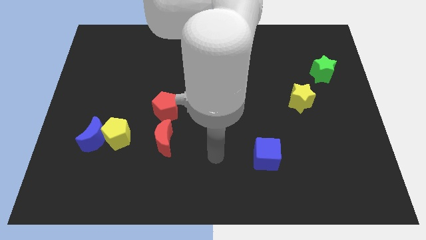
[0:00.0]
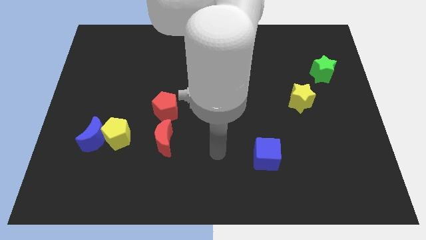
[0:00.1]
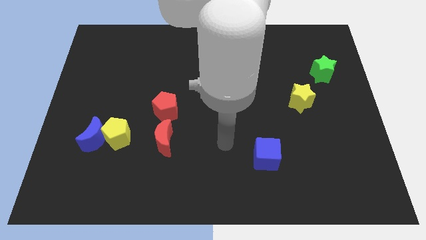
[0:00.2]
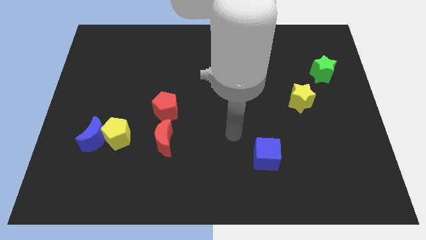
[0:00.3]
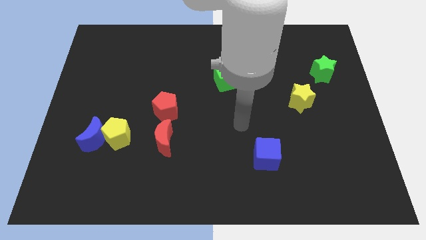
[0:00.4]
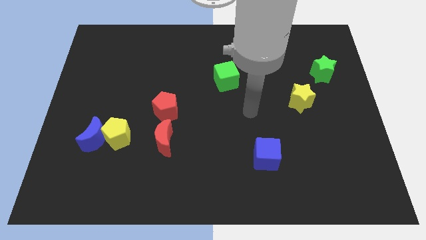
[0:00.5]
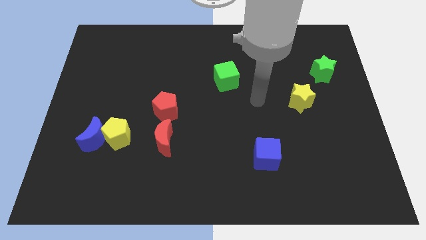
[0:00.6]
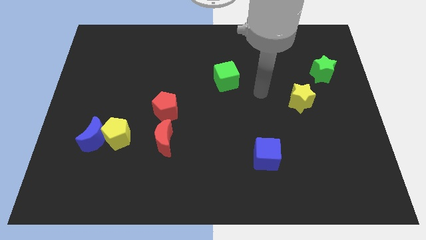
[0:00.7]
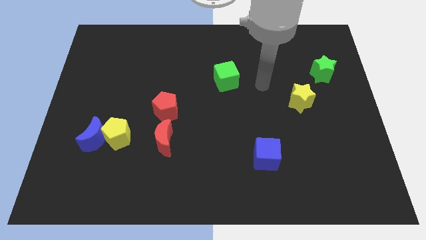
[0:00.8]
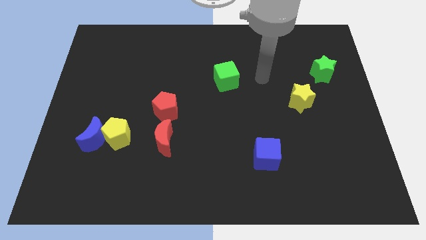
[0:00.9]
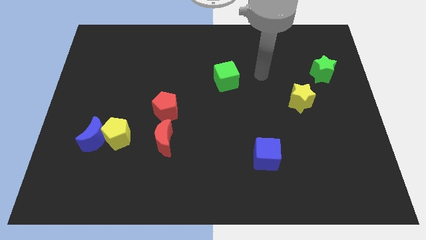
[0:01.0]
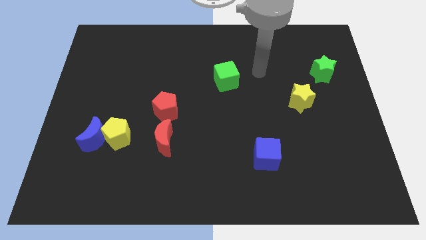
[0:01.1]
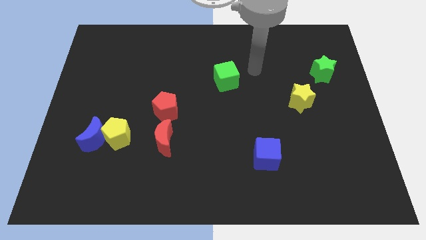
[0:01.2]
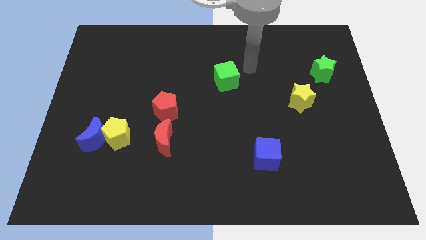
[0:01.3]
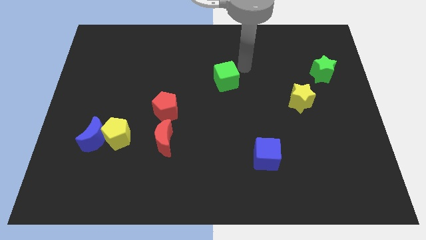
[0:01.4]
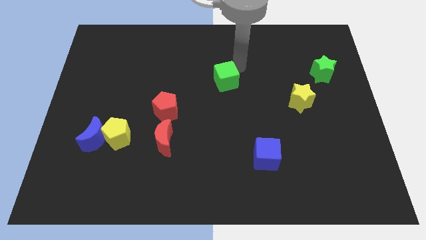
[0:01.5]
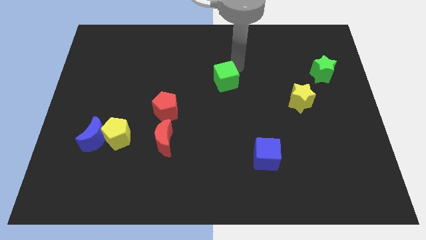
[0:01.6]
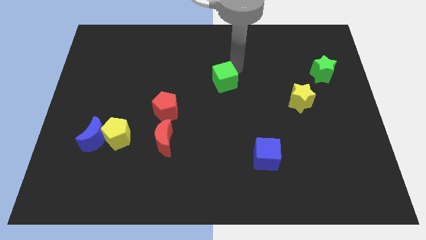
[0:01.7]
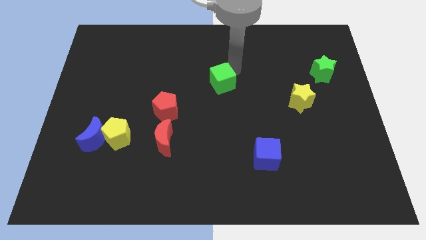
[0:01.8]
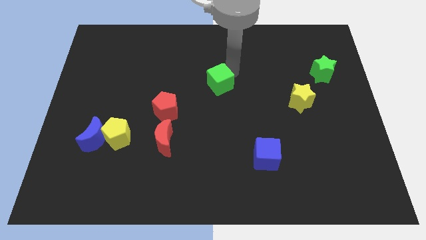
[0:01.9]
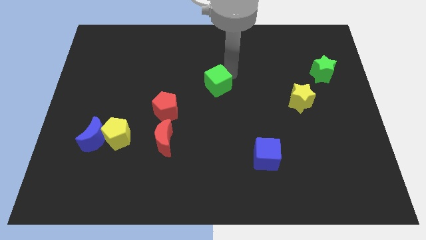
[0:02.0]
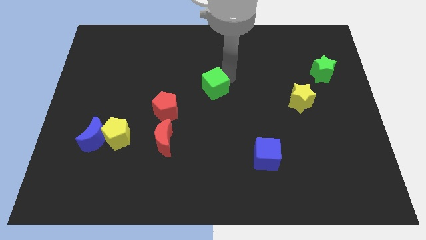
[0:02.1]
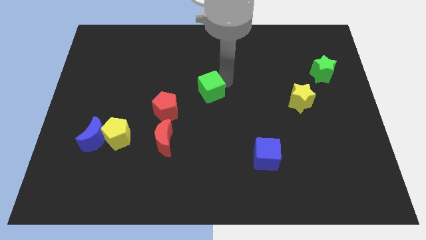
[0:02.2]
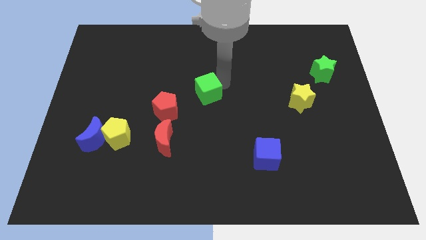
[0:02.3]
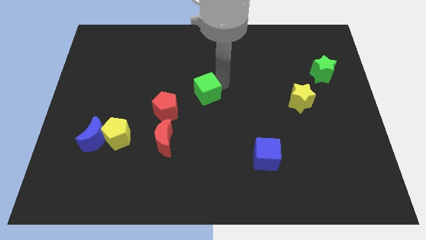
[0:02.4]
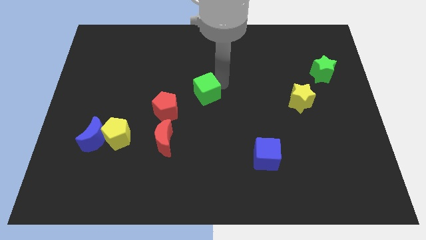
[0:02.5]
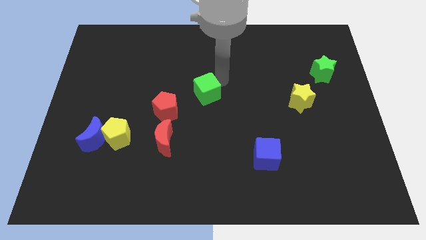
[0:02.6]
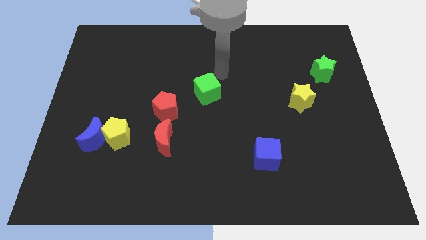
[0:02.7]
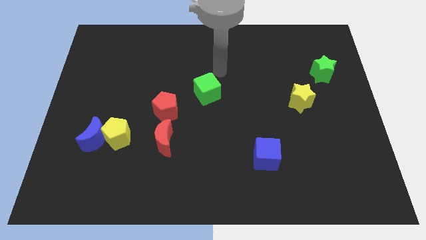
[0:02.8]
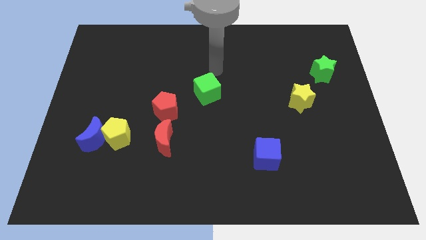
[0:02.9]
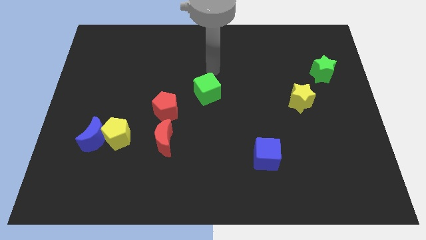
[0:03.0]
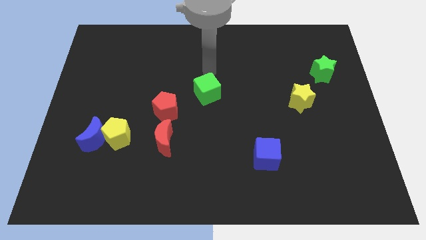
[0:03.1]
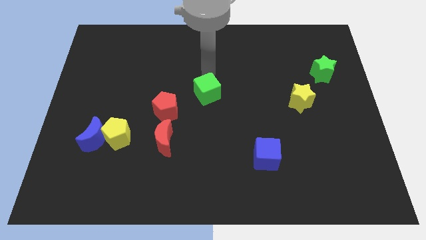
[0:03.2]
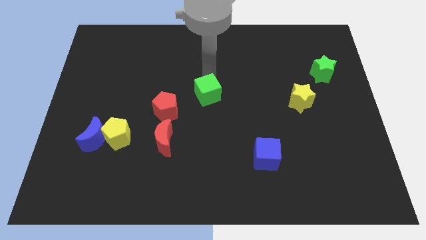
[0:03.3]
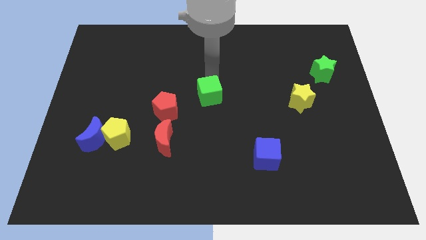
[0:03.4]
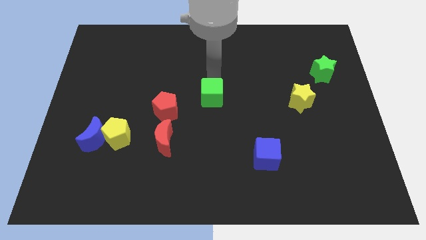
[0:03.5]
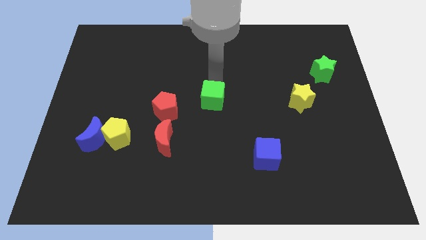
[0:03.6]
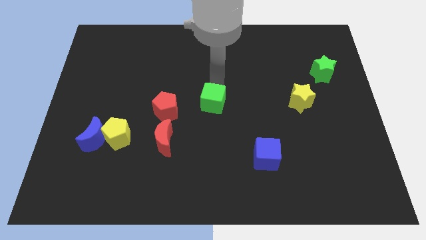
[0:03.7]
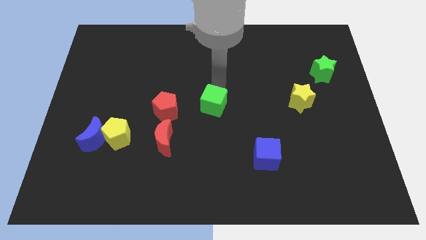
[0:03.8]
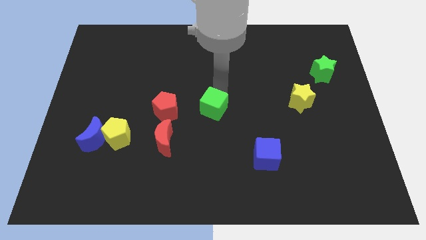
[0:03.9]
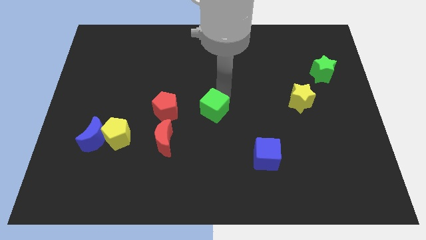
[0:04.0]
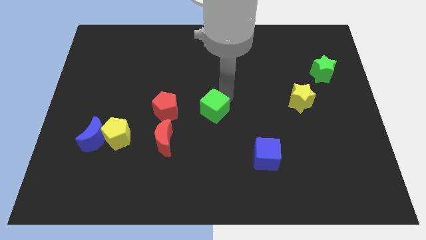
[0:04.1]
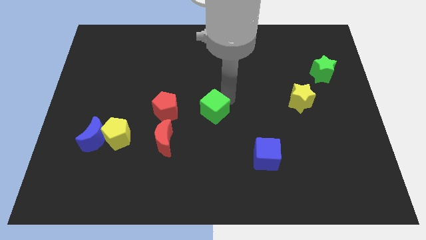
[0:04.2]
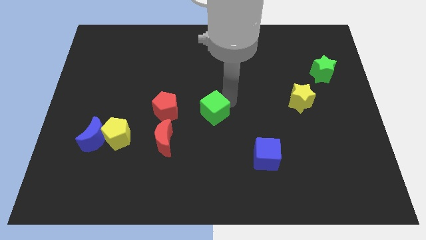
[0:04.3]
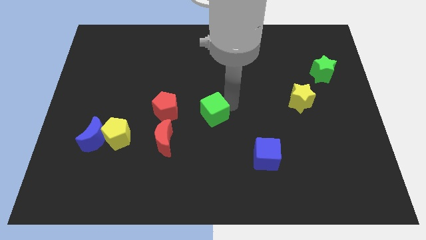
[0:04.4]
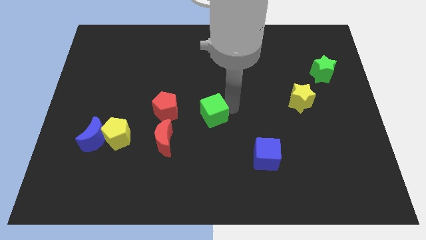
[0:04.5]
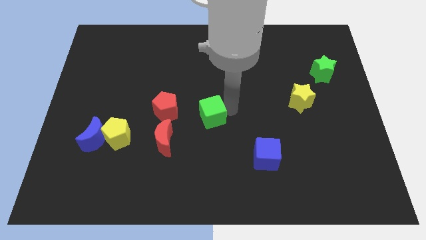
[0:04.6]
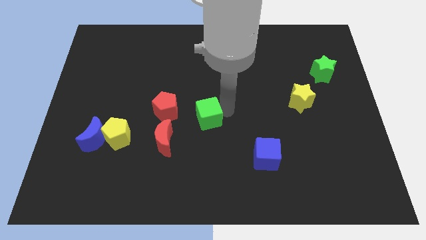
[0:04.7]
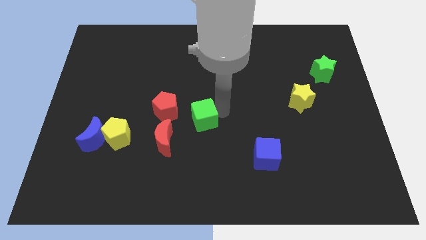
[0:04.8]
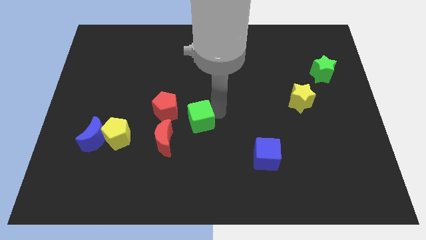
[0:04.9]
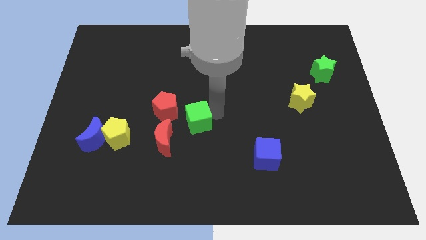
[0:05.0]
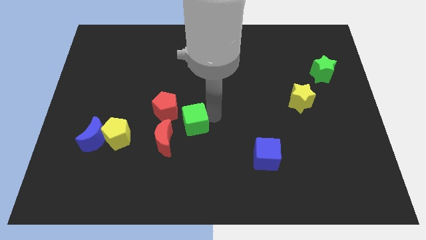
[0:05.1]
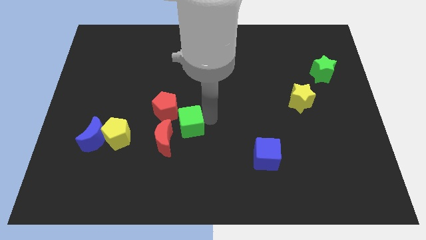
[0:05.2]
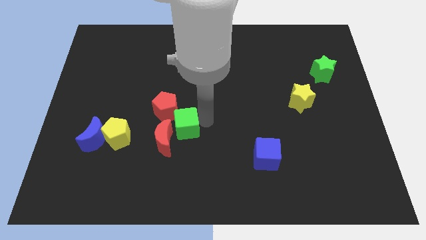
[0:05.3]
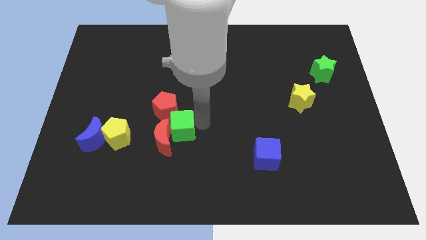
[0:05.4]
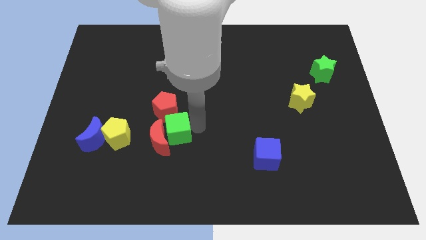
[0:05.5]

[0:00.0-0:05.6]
push the green cube next to the red moon

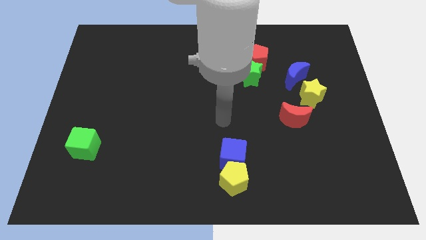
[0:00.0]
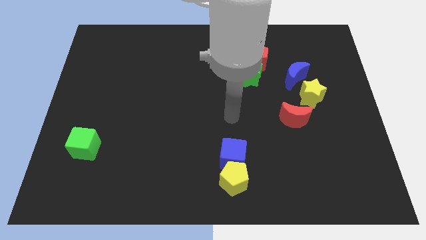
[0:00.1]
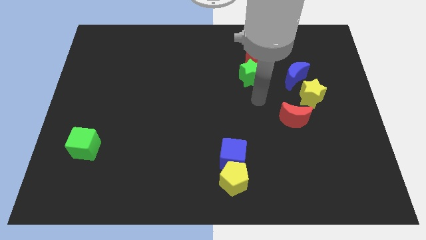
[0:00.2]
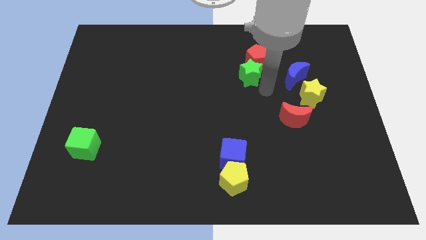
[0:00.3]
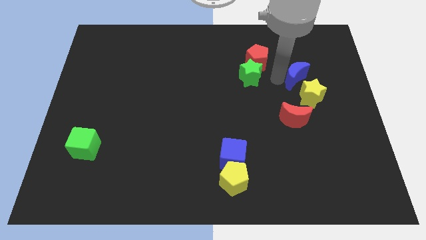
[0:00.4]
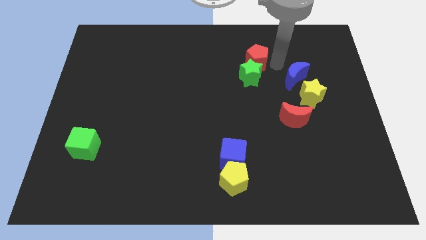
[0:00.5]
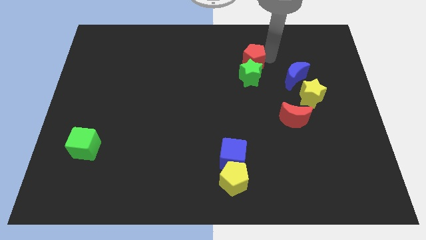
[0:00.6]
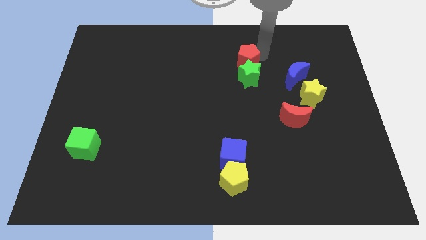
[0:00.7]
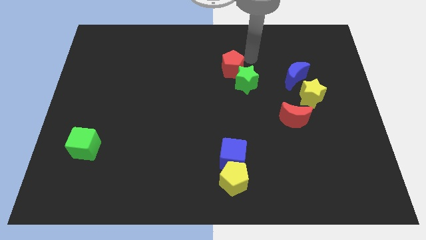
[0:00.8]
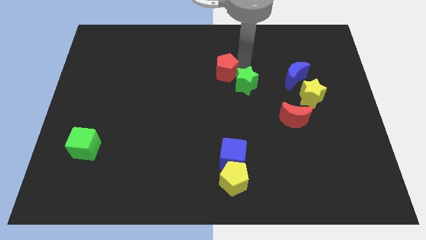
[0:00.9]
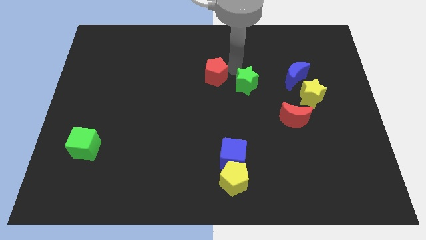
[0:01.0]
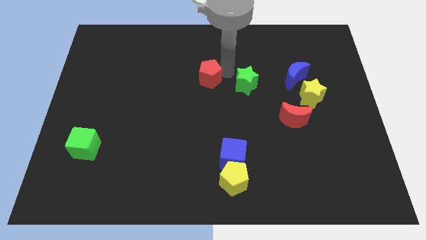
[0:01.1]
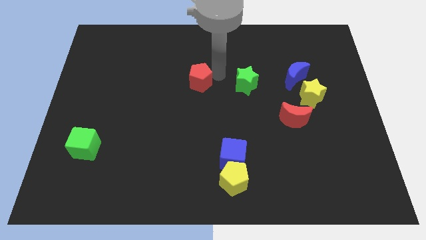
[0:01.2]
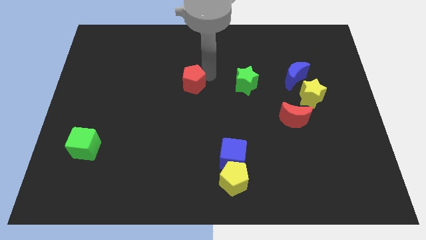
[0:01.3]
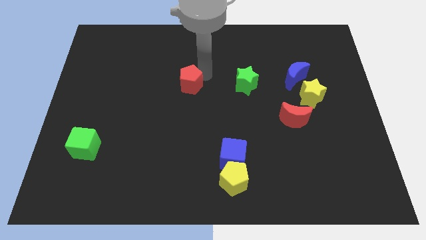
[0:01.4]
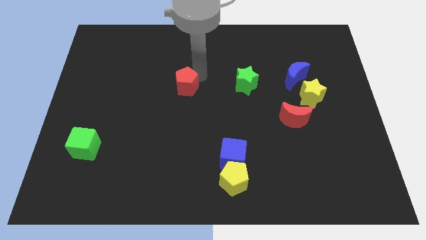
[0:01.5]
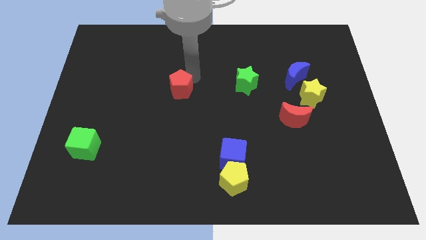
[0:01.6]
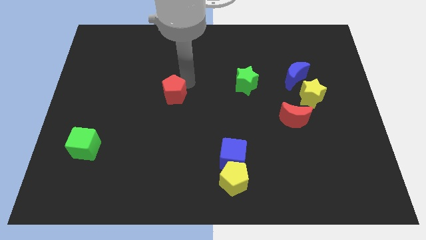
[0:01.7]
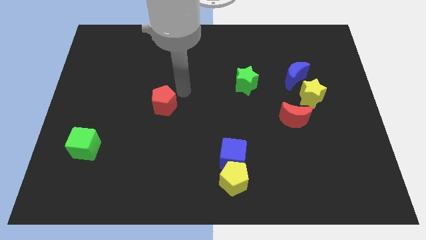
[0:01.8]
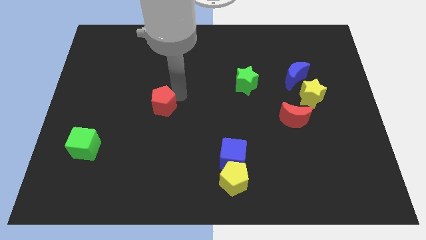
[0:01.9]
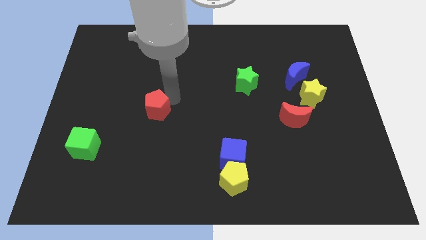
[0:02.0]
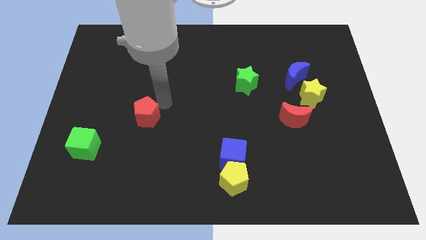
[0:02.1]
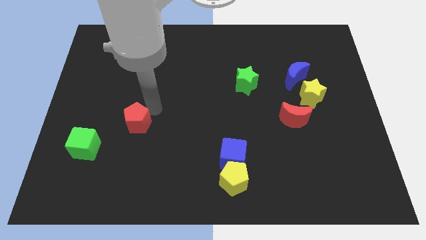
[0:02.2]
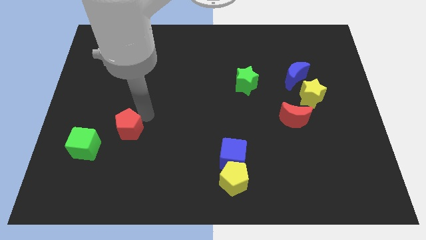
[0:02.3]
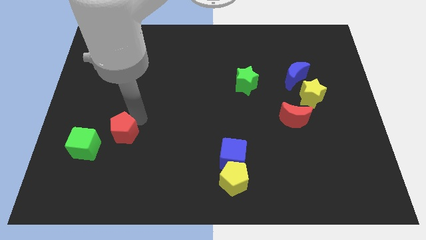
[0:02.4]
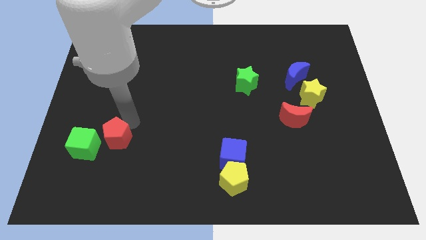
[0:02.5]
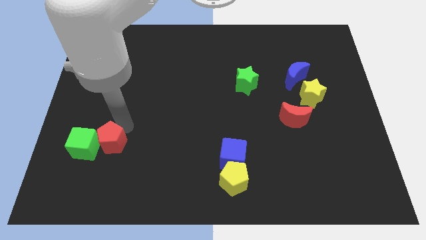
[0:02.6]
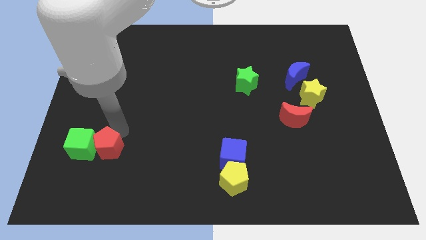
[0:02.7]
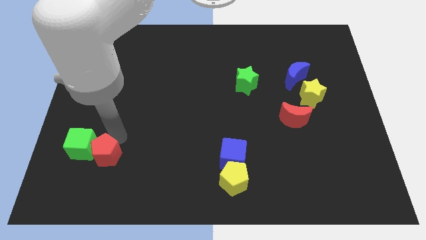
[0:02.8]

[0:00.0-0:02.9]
push the red pentagon close to the green cube

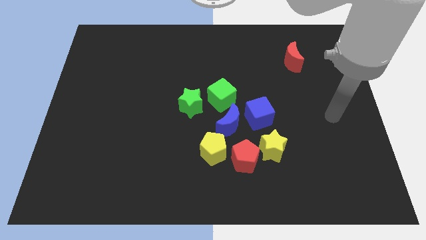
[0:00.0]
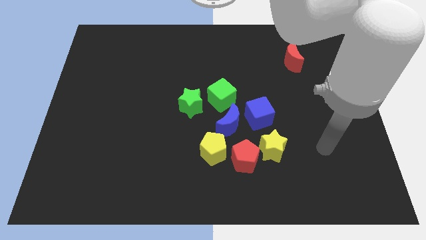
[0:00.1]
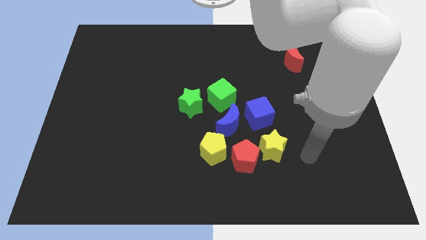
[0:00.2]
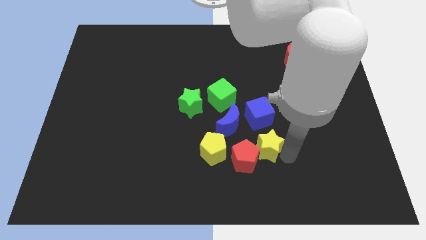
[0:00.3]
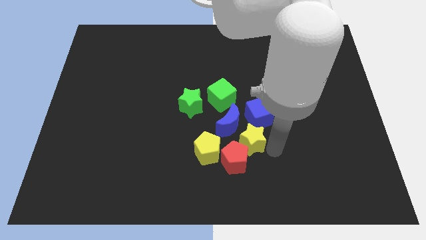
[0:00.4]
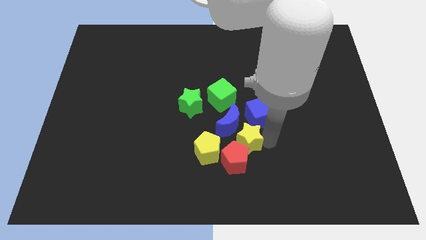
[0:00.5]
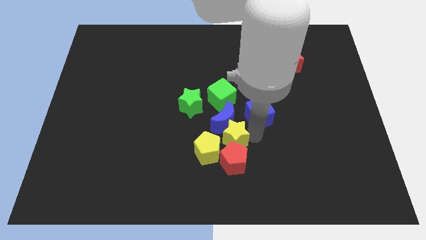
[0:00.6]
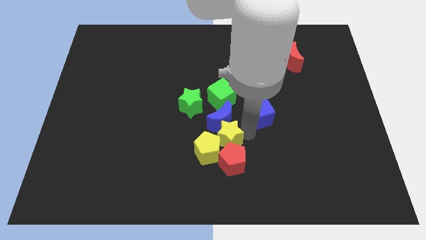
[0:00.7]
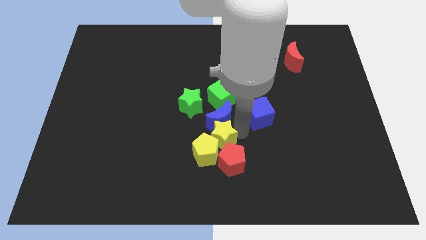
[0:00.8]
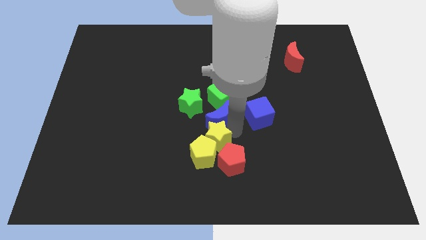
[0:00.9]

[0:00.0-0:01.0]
put the yellow star close to the yellow pentagon
